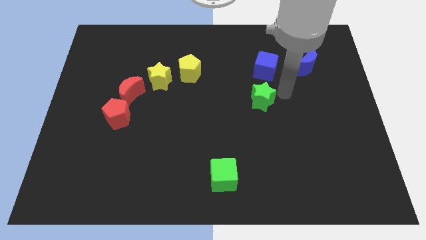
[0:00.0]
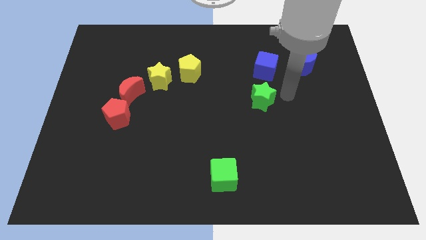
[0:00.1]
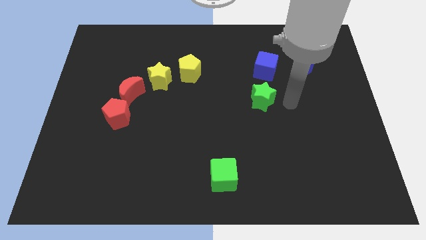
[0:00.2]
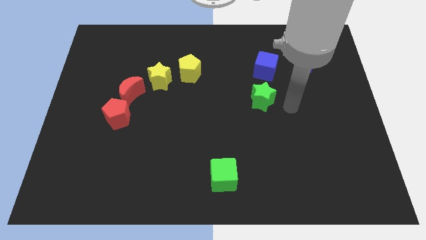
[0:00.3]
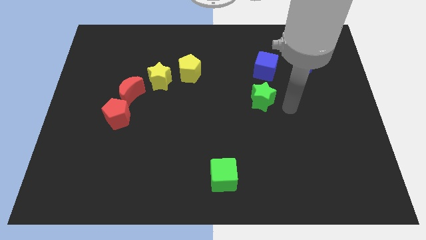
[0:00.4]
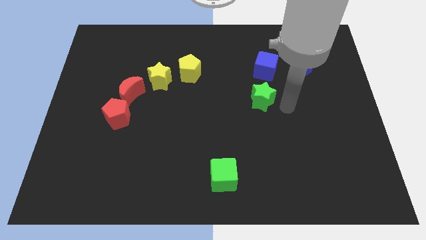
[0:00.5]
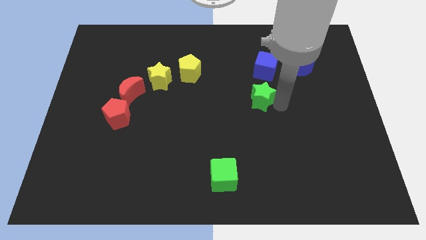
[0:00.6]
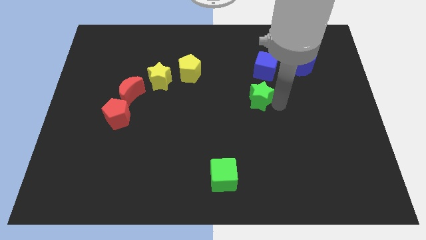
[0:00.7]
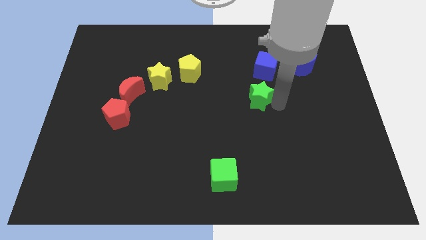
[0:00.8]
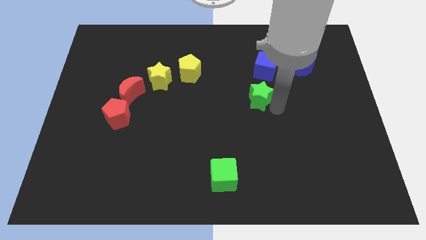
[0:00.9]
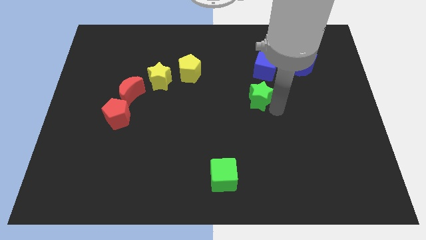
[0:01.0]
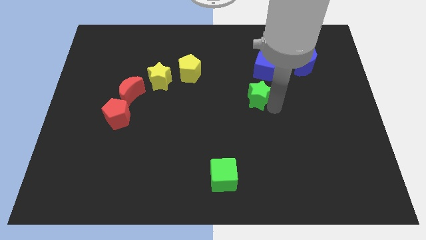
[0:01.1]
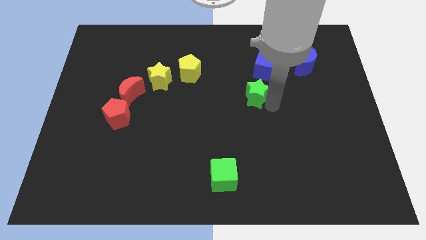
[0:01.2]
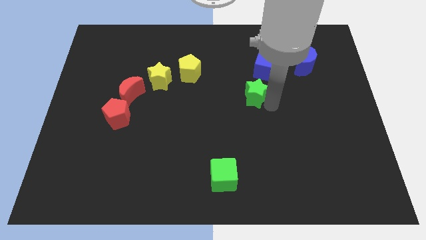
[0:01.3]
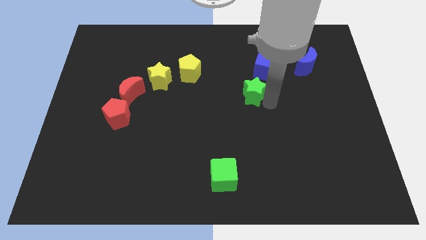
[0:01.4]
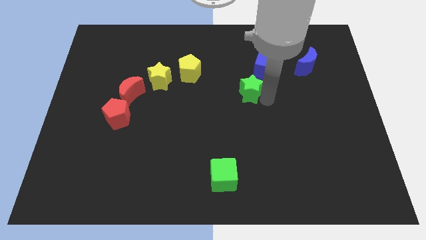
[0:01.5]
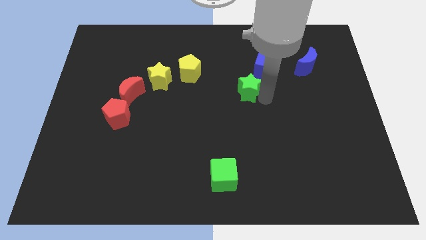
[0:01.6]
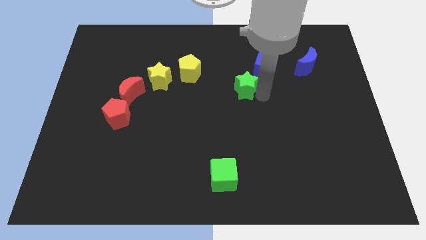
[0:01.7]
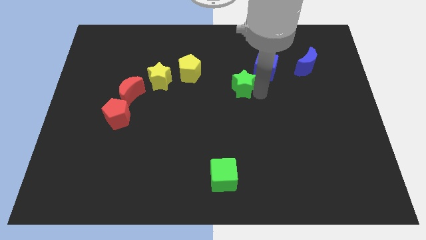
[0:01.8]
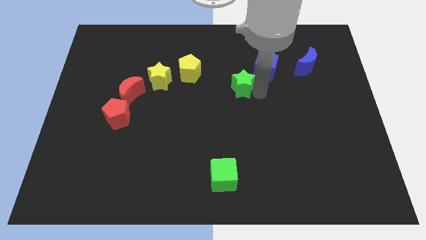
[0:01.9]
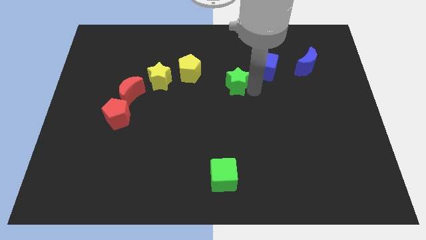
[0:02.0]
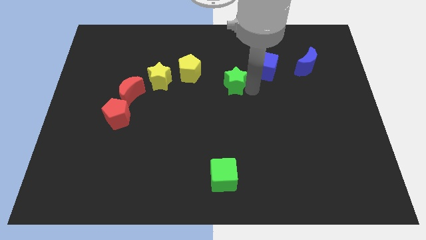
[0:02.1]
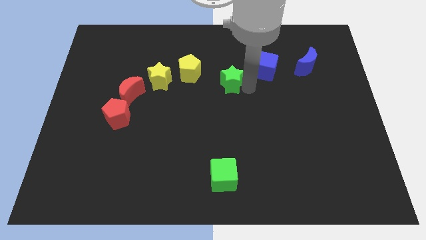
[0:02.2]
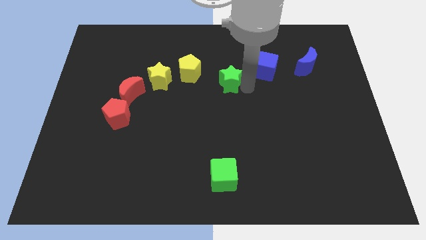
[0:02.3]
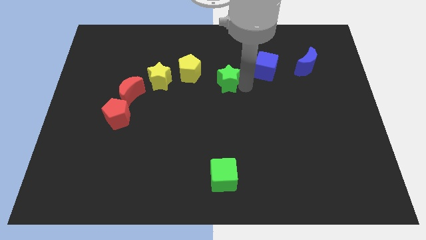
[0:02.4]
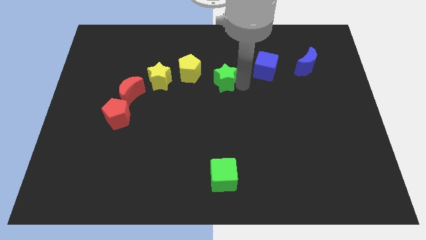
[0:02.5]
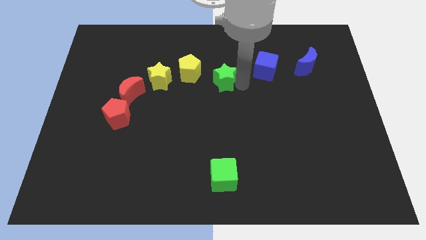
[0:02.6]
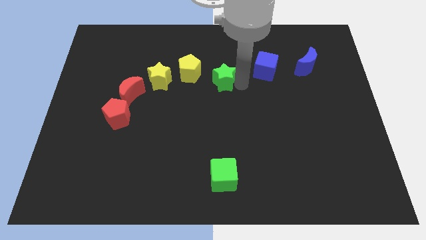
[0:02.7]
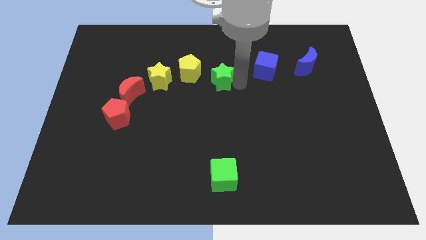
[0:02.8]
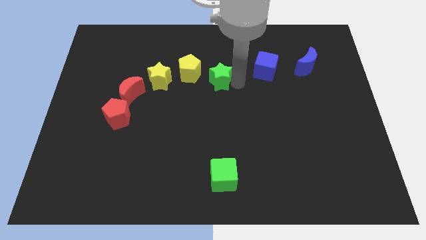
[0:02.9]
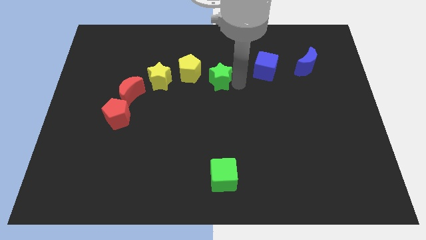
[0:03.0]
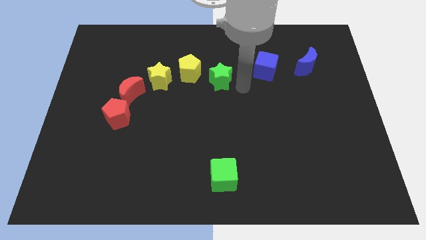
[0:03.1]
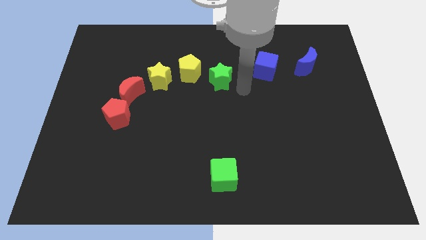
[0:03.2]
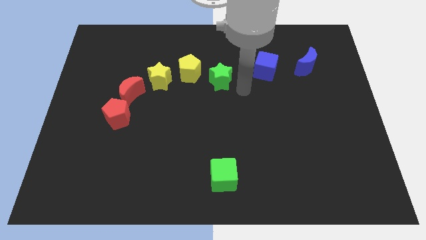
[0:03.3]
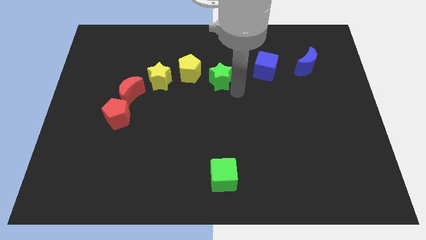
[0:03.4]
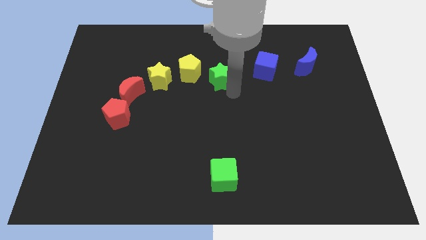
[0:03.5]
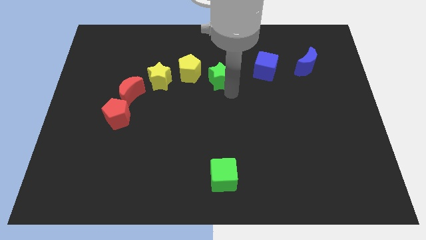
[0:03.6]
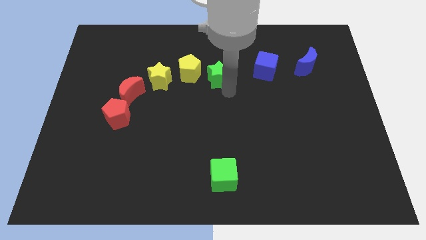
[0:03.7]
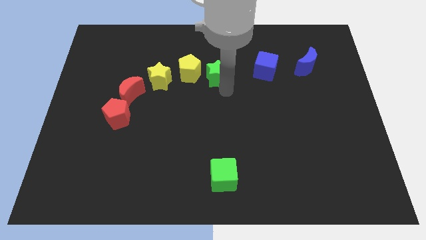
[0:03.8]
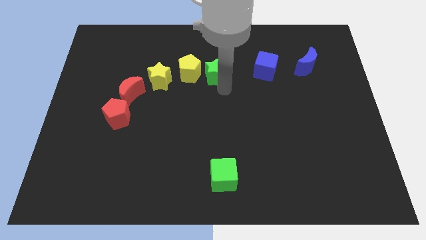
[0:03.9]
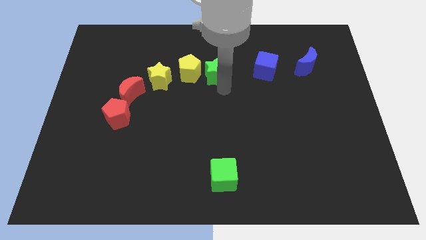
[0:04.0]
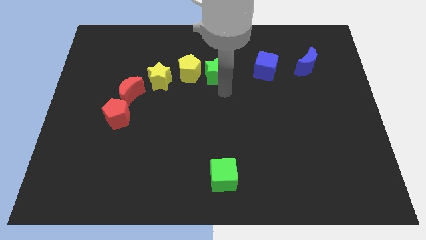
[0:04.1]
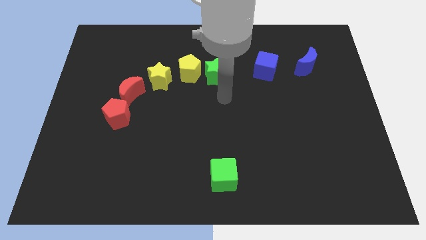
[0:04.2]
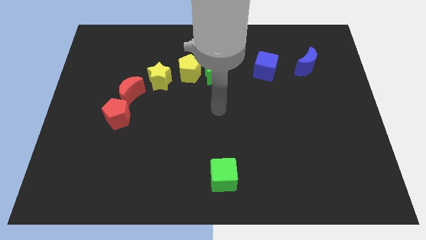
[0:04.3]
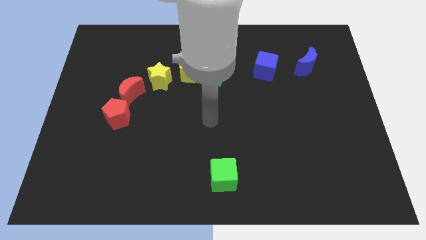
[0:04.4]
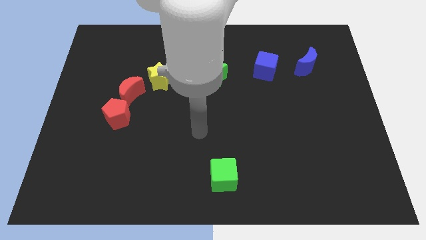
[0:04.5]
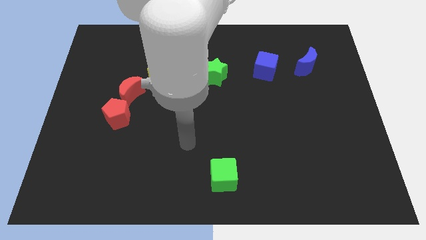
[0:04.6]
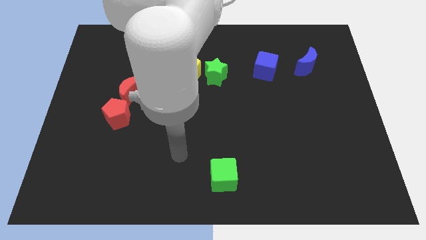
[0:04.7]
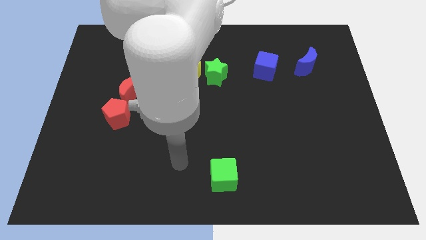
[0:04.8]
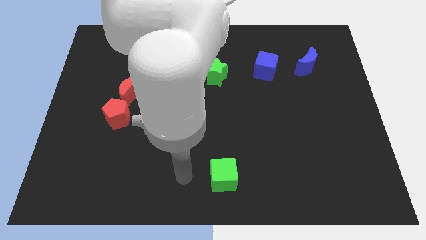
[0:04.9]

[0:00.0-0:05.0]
move the green star to the bottom right side of the yellow pentagon

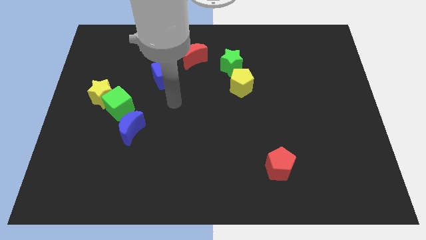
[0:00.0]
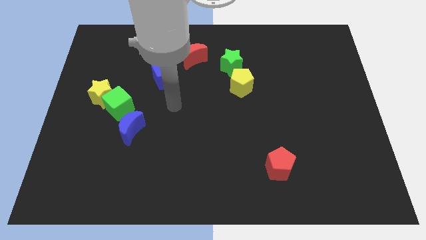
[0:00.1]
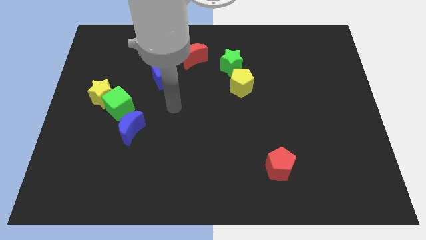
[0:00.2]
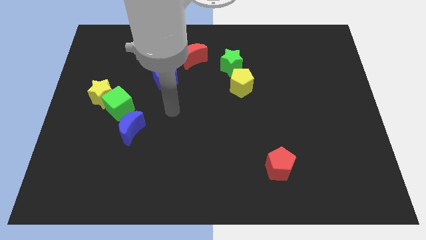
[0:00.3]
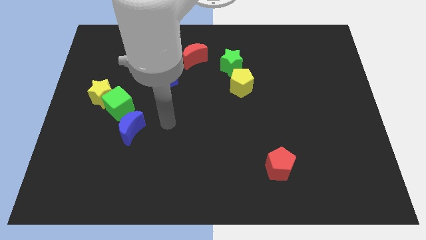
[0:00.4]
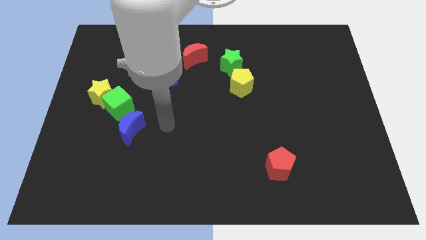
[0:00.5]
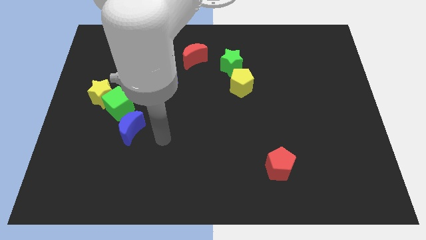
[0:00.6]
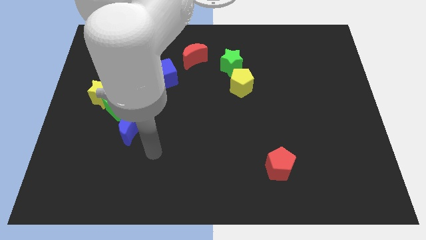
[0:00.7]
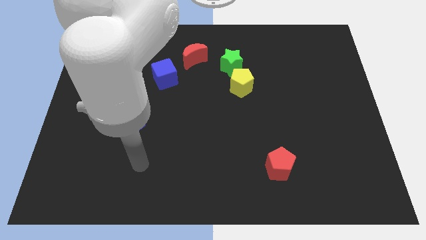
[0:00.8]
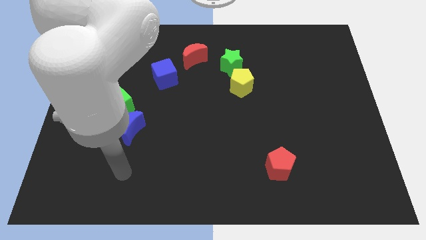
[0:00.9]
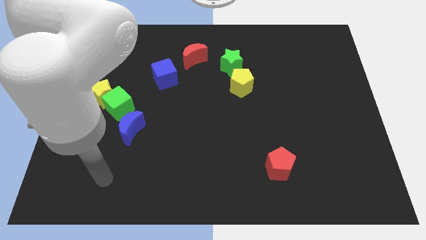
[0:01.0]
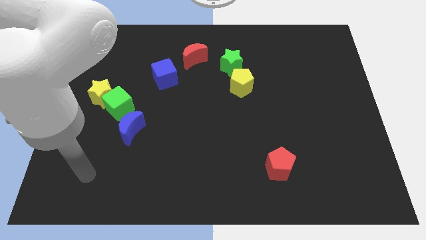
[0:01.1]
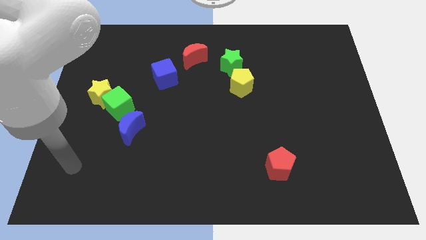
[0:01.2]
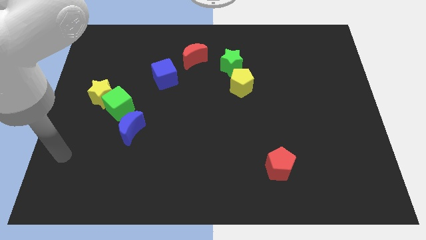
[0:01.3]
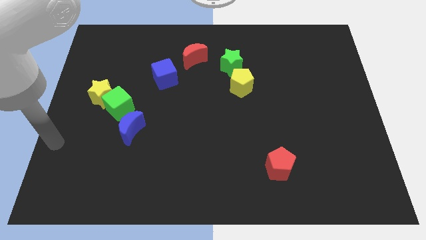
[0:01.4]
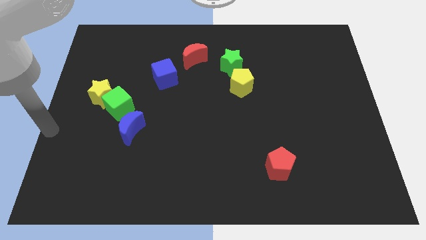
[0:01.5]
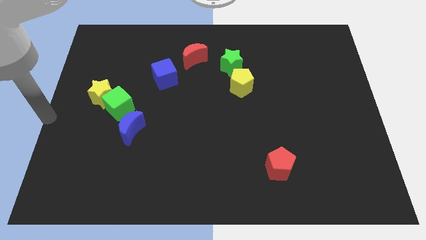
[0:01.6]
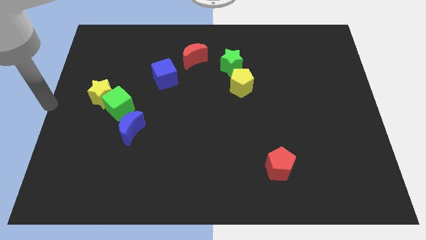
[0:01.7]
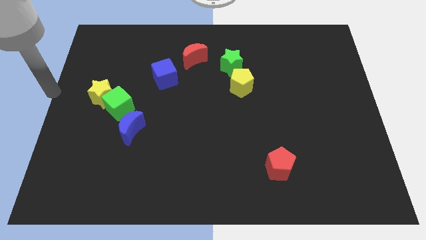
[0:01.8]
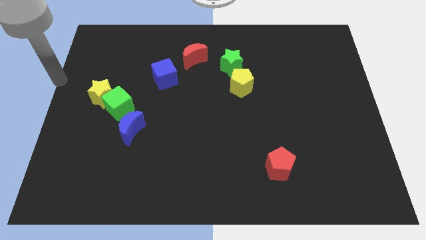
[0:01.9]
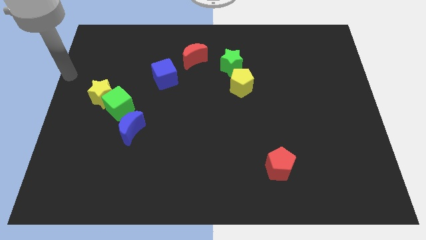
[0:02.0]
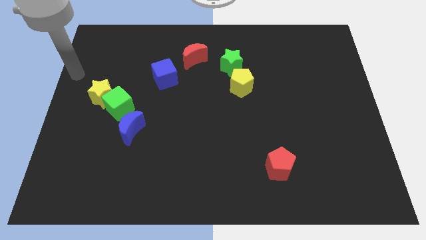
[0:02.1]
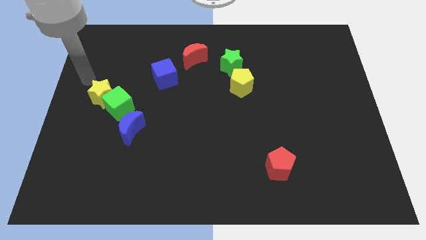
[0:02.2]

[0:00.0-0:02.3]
move the arm towards the yellow star

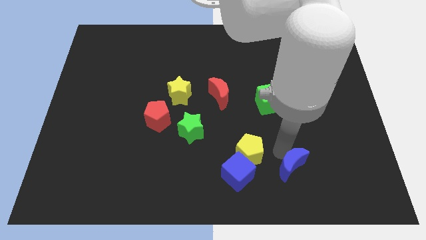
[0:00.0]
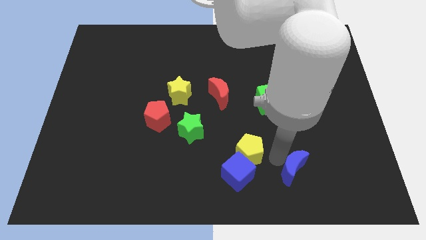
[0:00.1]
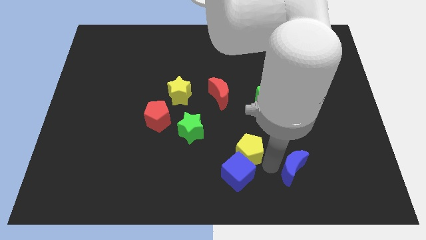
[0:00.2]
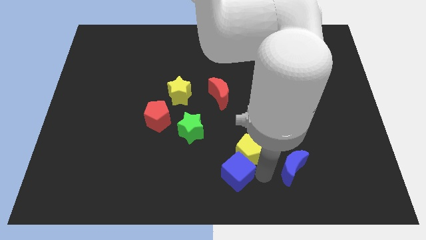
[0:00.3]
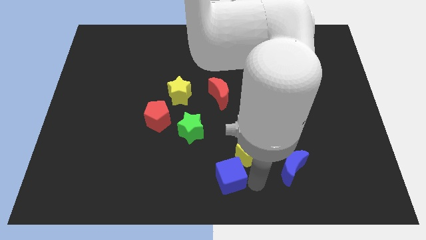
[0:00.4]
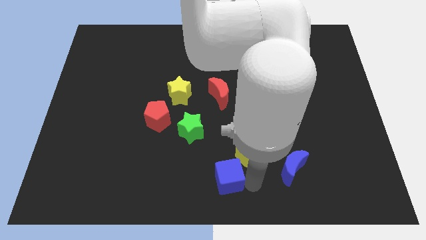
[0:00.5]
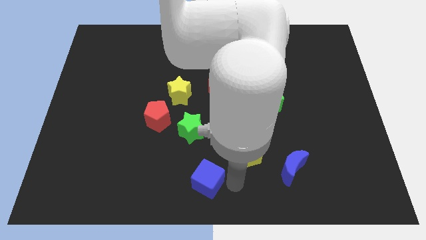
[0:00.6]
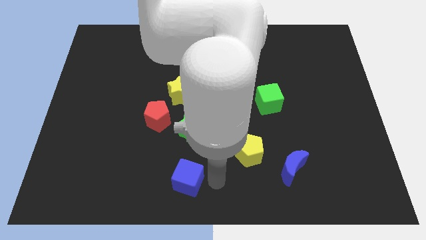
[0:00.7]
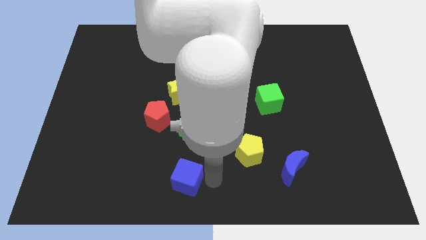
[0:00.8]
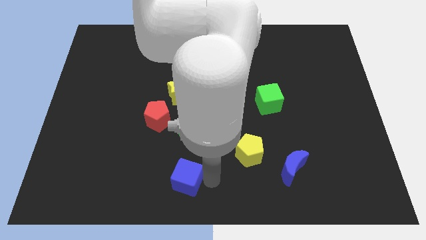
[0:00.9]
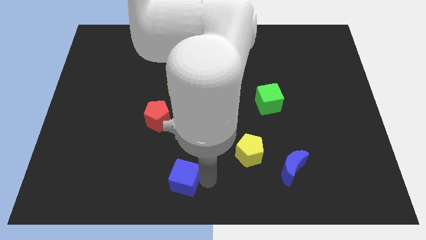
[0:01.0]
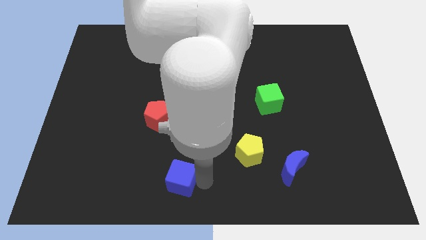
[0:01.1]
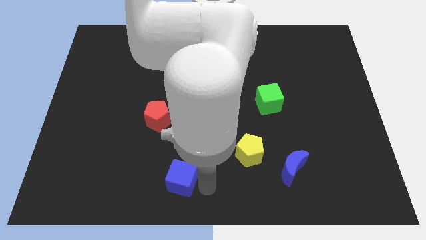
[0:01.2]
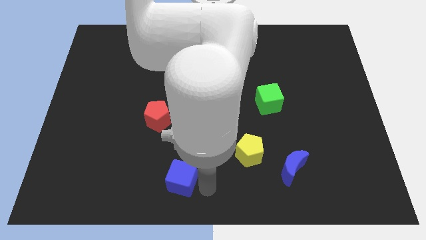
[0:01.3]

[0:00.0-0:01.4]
place the blue cube below the green star

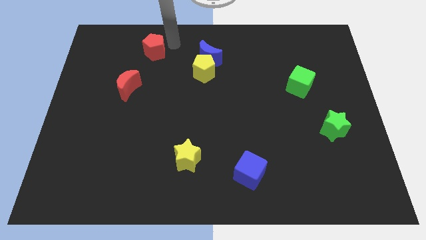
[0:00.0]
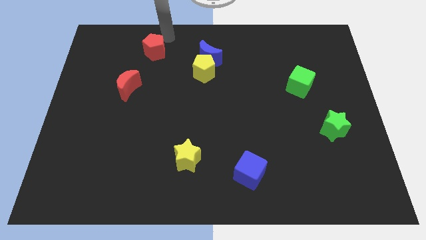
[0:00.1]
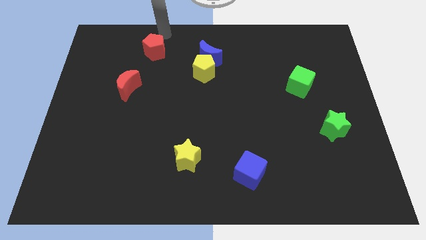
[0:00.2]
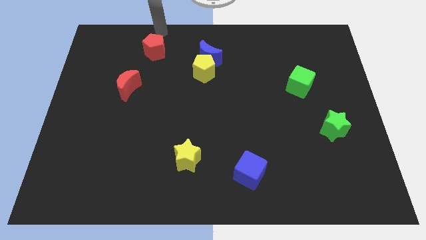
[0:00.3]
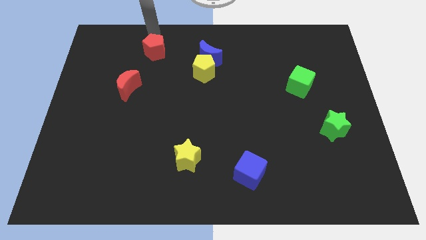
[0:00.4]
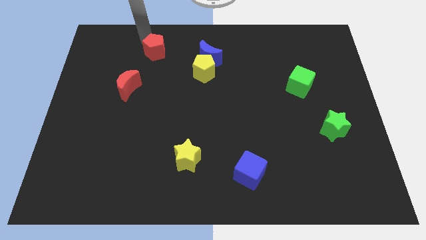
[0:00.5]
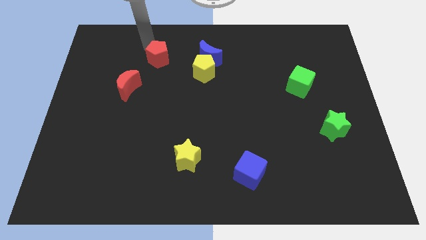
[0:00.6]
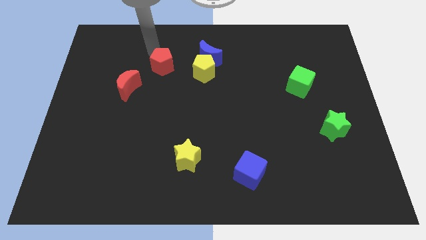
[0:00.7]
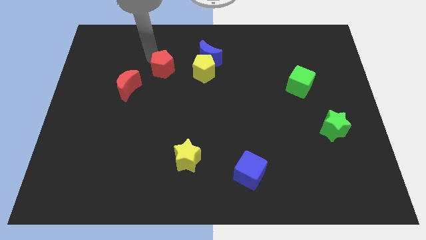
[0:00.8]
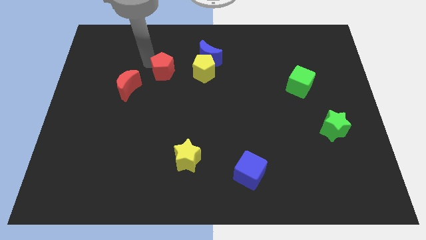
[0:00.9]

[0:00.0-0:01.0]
place the red pentagon in between the red crescent and yellow pentagon
